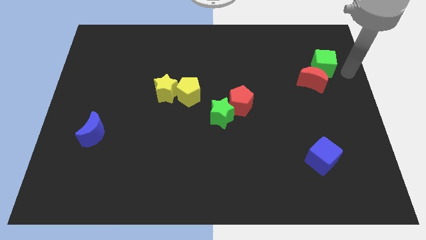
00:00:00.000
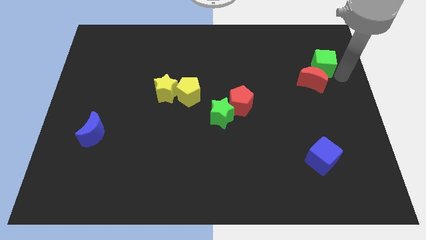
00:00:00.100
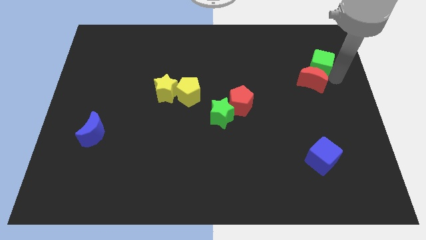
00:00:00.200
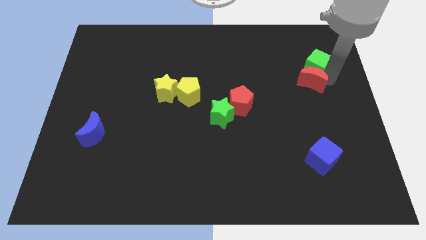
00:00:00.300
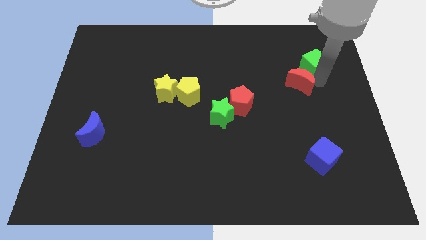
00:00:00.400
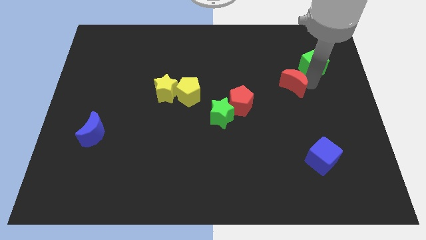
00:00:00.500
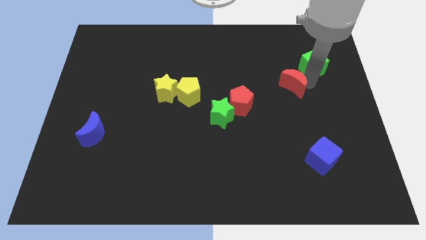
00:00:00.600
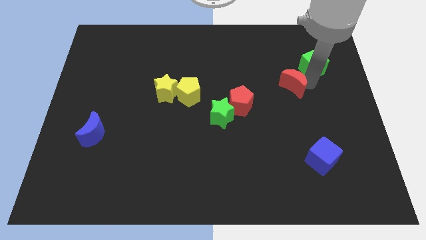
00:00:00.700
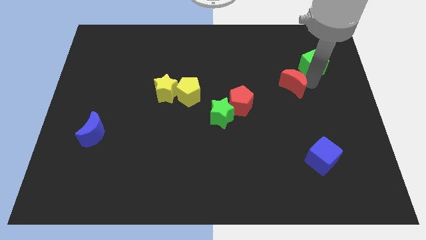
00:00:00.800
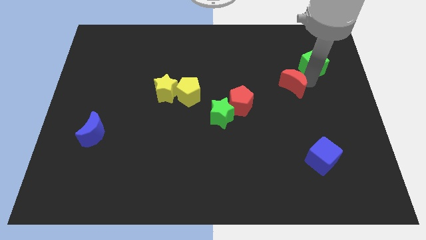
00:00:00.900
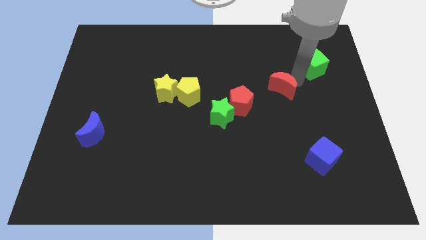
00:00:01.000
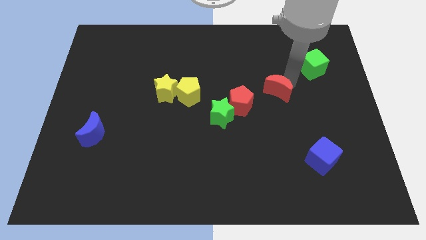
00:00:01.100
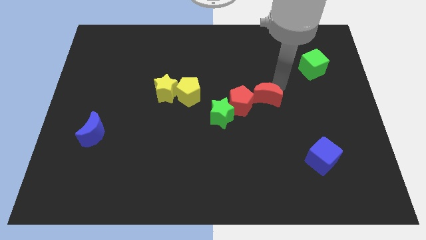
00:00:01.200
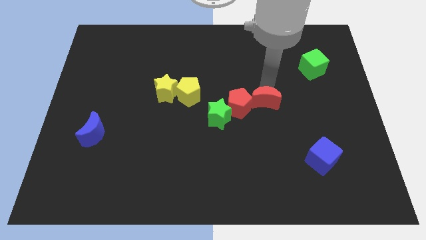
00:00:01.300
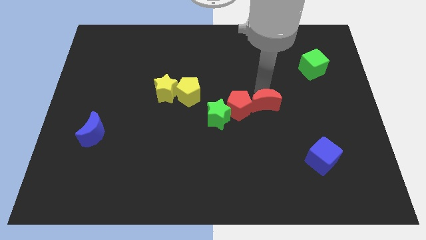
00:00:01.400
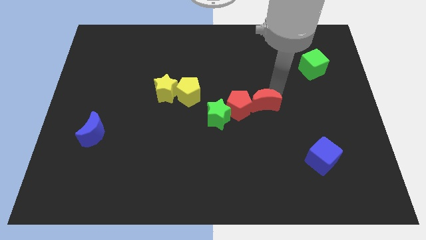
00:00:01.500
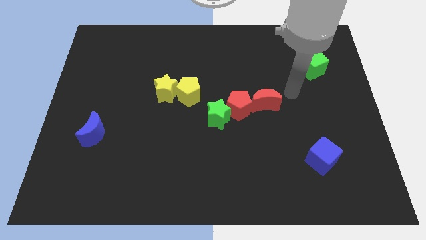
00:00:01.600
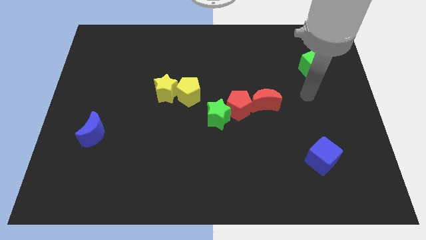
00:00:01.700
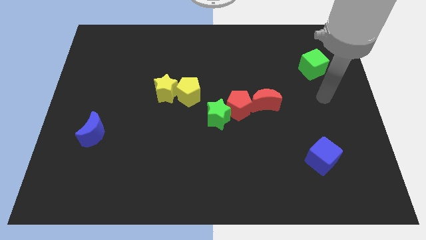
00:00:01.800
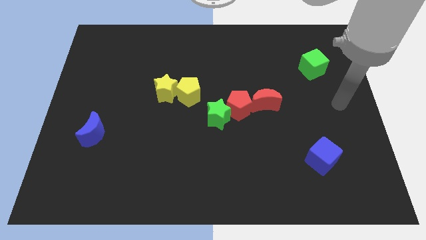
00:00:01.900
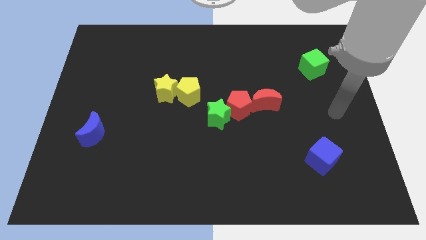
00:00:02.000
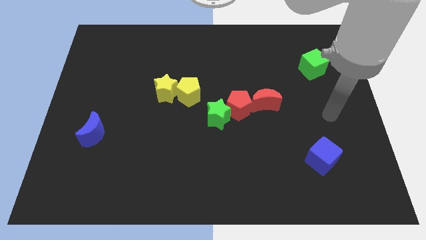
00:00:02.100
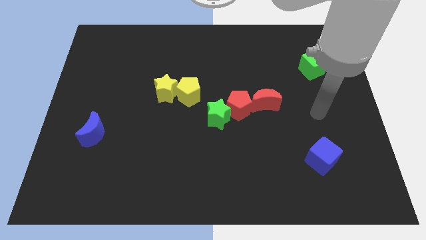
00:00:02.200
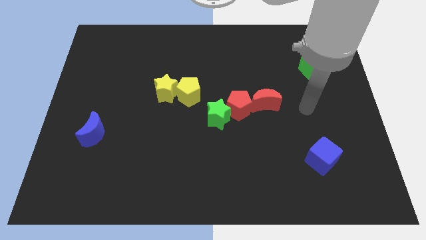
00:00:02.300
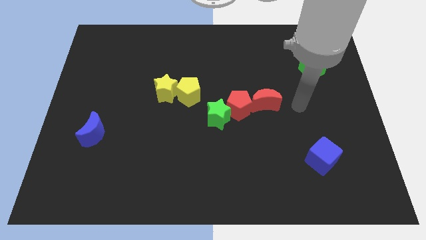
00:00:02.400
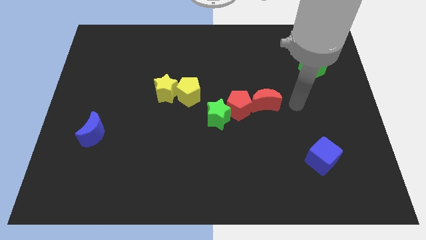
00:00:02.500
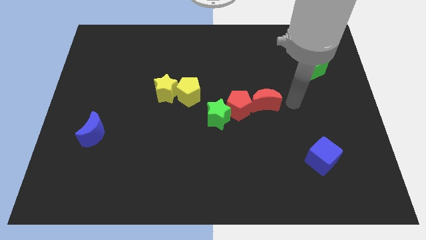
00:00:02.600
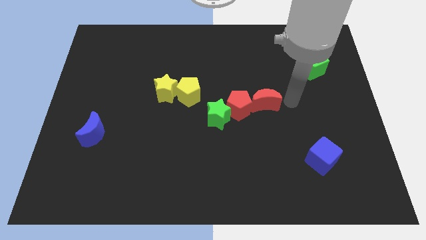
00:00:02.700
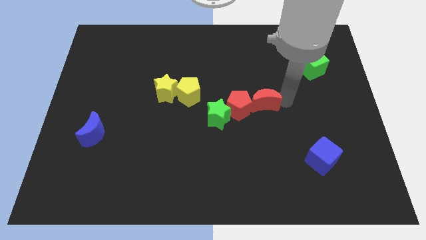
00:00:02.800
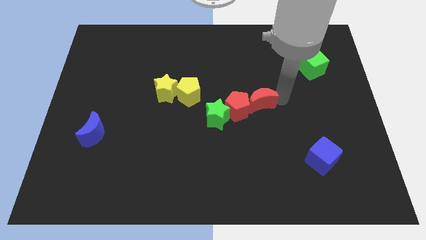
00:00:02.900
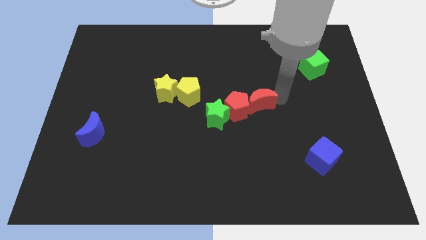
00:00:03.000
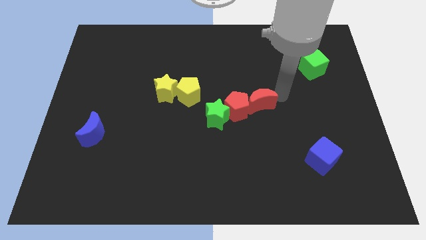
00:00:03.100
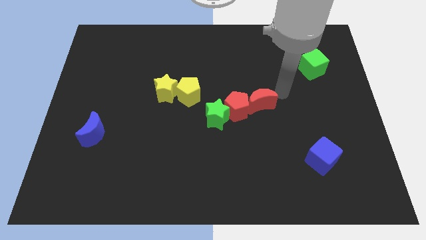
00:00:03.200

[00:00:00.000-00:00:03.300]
push the red crescent to the top right side of the red pentagon

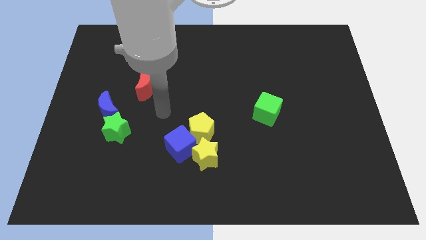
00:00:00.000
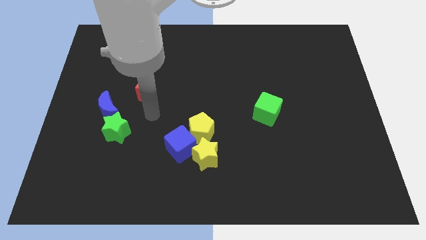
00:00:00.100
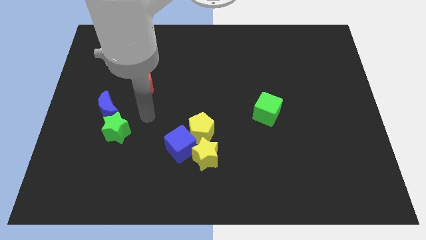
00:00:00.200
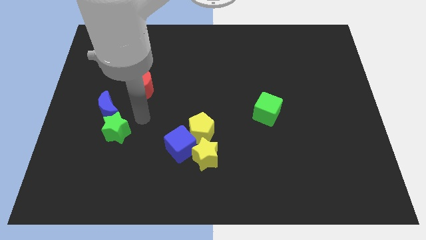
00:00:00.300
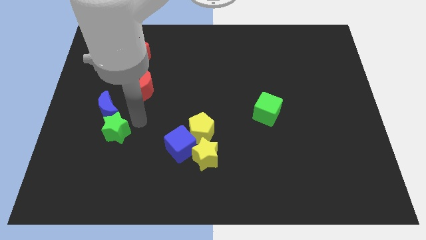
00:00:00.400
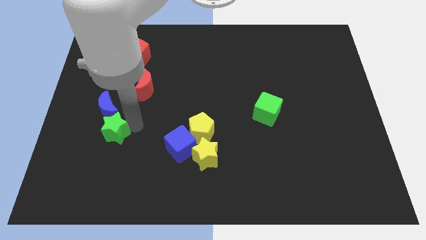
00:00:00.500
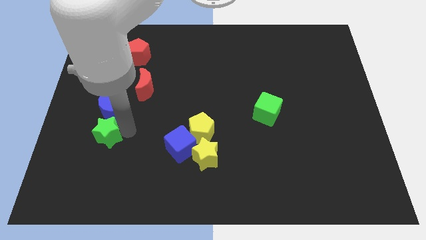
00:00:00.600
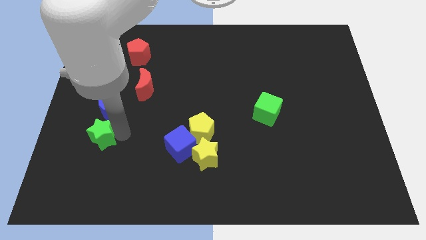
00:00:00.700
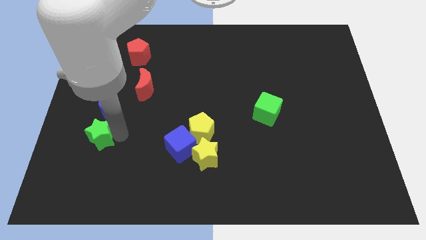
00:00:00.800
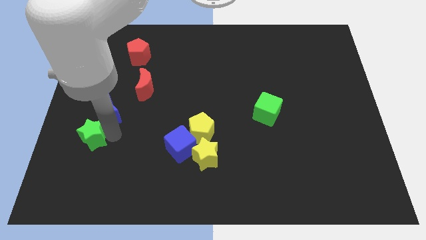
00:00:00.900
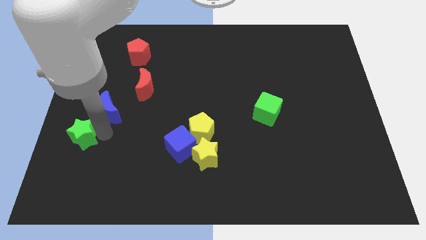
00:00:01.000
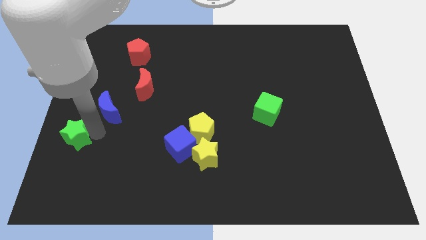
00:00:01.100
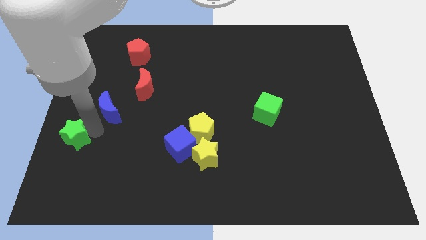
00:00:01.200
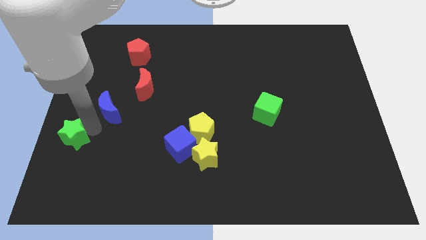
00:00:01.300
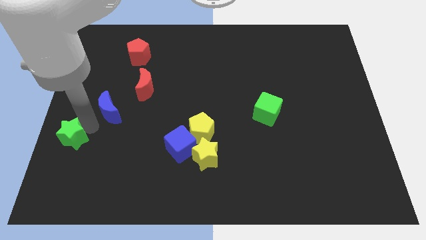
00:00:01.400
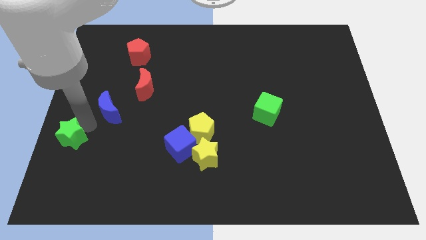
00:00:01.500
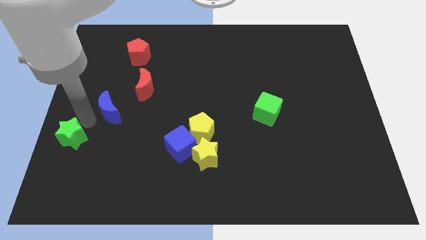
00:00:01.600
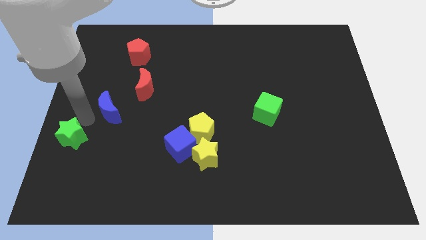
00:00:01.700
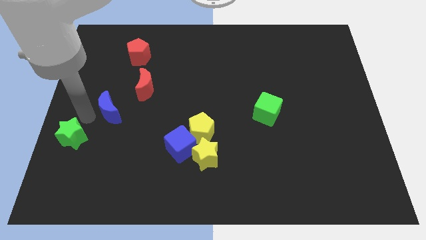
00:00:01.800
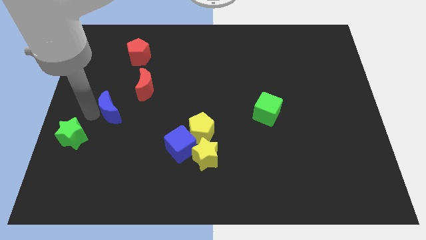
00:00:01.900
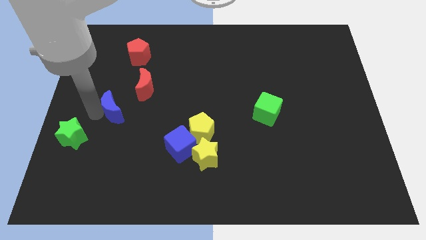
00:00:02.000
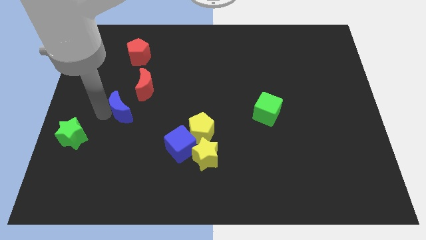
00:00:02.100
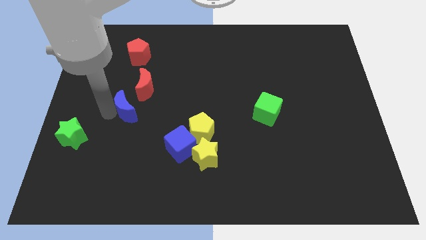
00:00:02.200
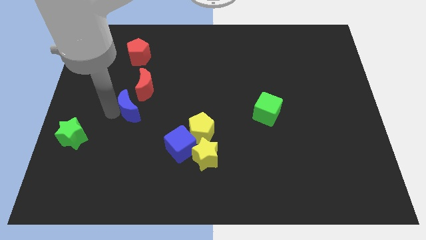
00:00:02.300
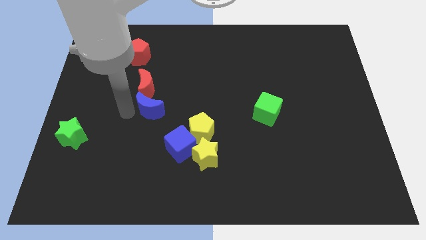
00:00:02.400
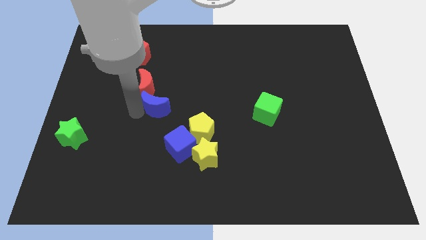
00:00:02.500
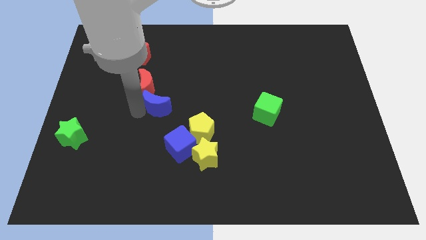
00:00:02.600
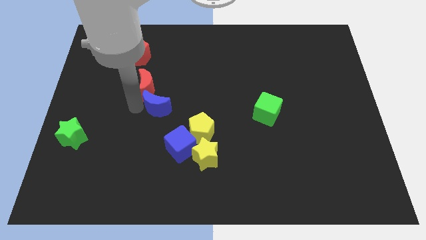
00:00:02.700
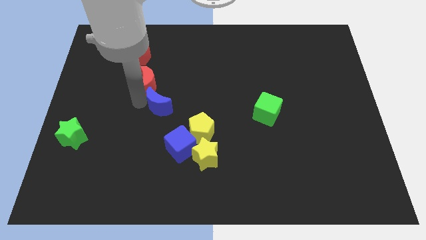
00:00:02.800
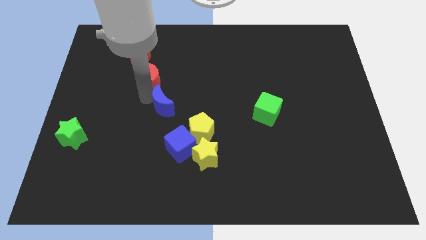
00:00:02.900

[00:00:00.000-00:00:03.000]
separate the green star and the blue crescent

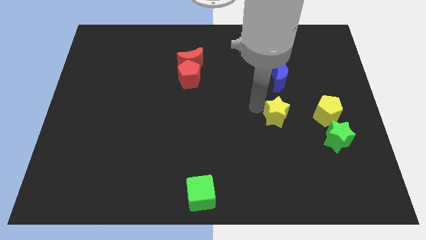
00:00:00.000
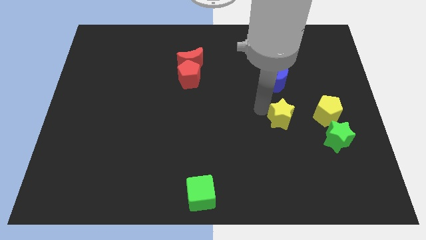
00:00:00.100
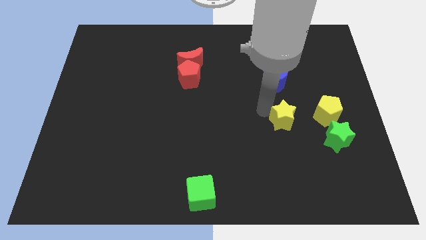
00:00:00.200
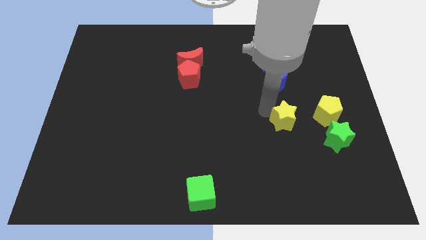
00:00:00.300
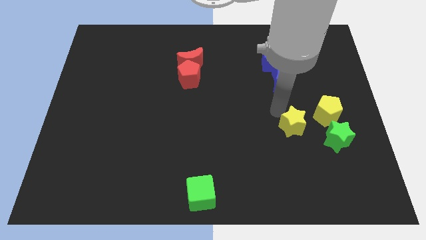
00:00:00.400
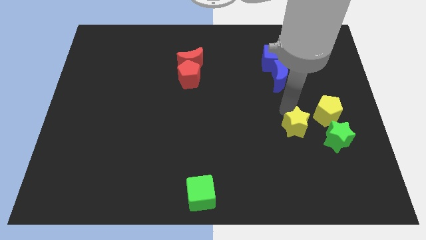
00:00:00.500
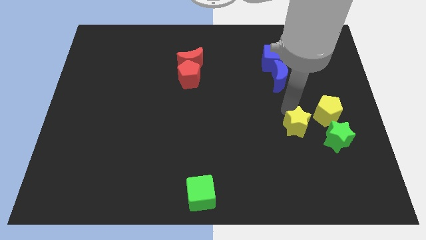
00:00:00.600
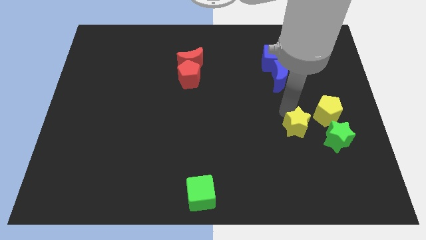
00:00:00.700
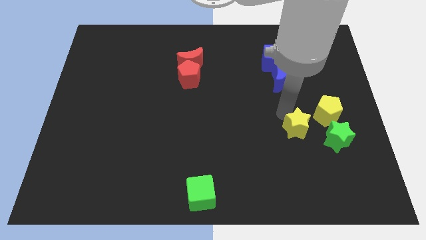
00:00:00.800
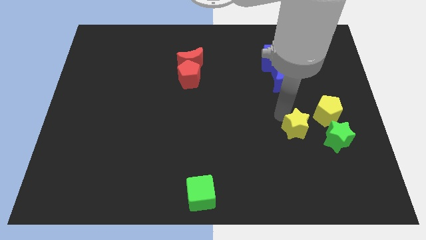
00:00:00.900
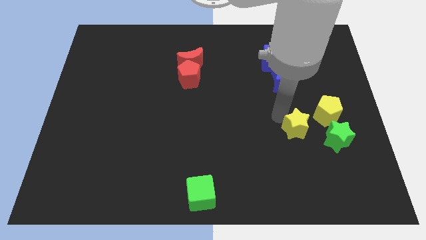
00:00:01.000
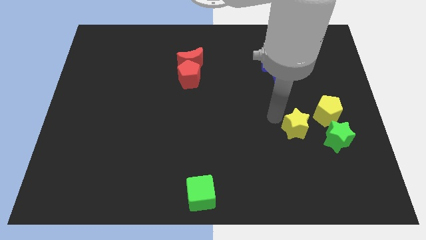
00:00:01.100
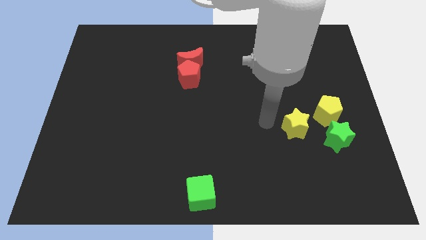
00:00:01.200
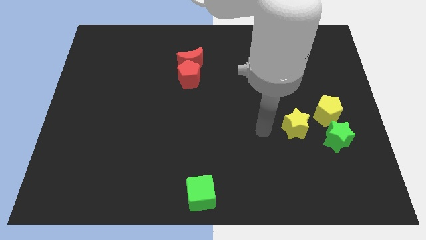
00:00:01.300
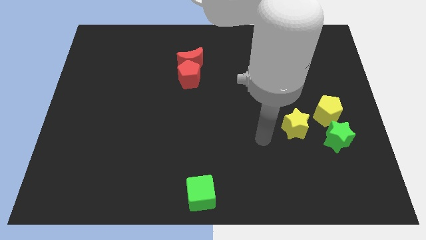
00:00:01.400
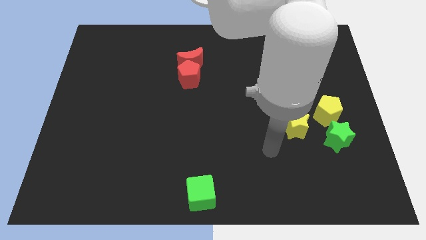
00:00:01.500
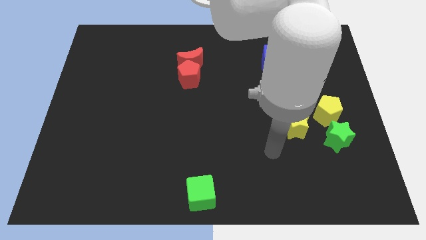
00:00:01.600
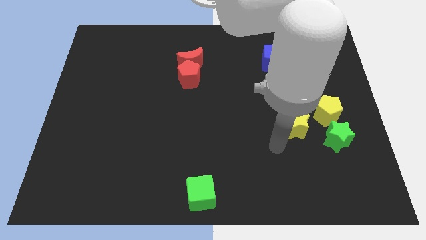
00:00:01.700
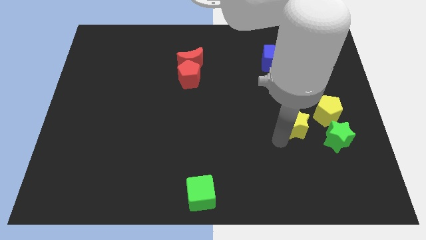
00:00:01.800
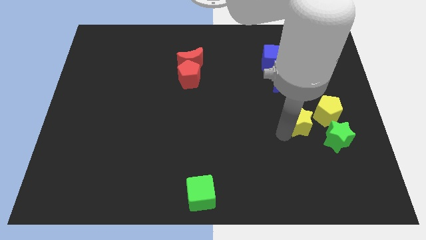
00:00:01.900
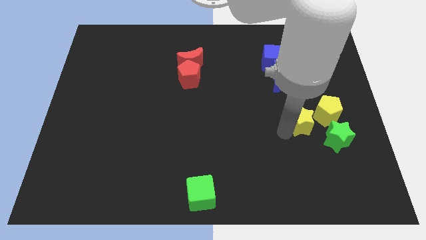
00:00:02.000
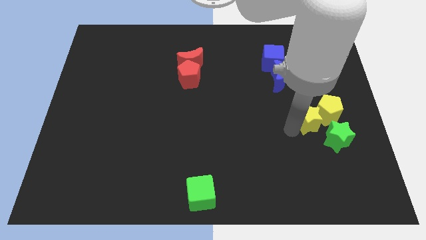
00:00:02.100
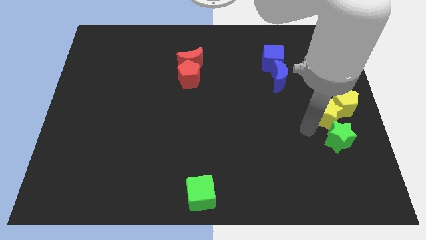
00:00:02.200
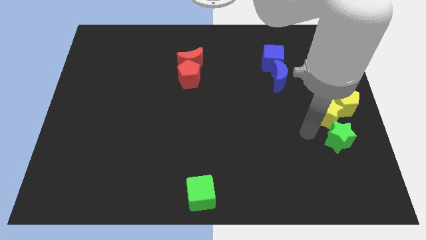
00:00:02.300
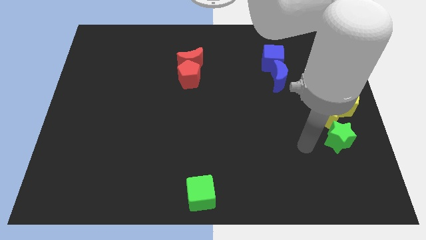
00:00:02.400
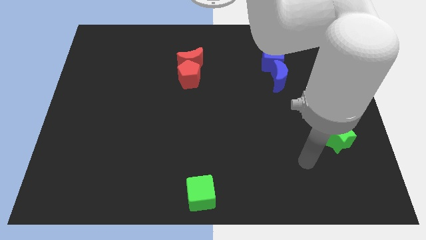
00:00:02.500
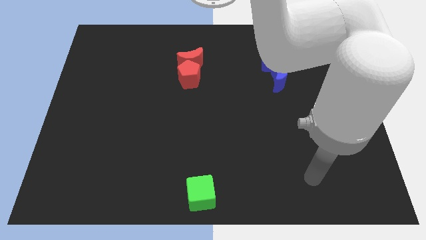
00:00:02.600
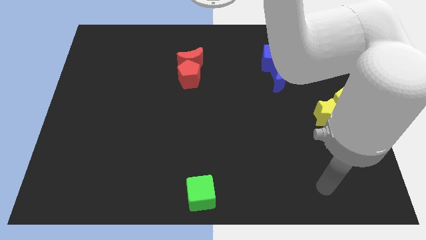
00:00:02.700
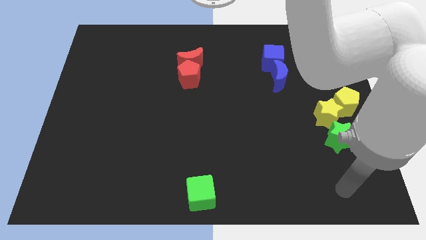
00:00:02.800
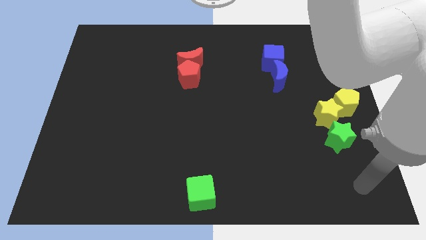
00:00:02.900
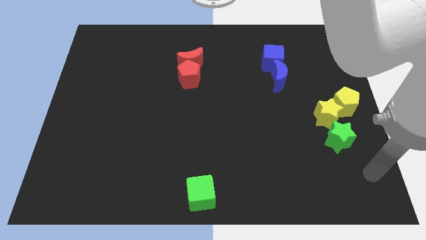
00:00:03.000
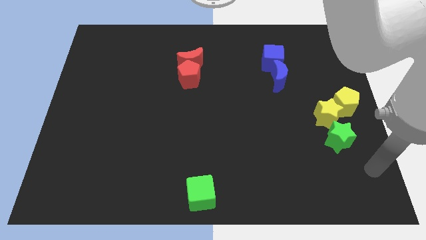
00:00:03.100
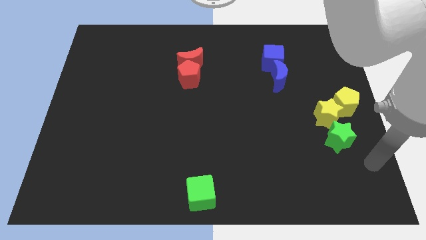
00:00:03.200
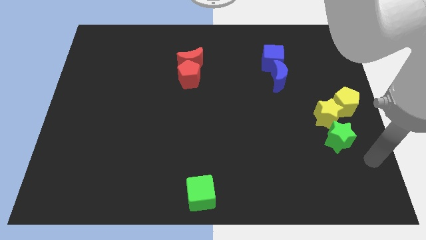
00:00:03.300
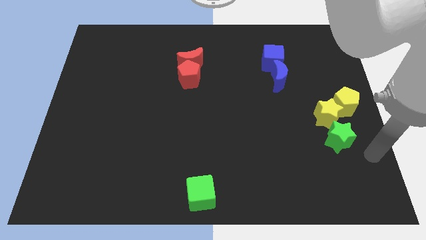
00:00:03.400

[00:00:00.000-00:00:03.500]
slide yellow star into the yellow pentagon
